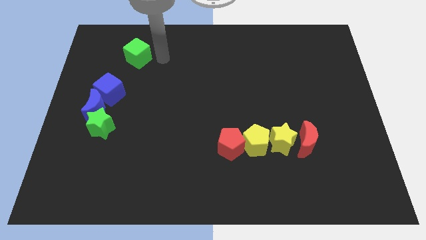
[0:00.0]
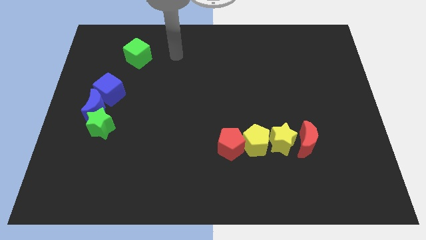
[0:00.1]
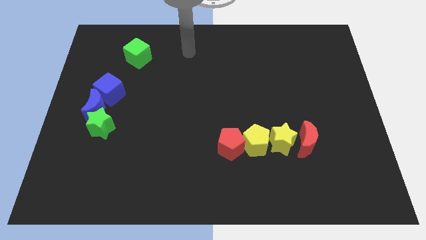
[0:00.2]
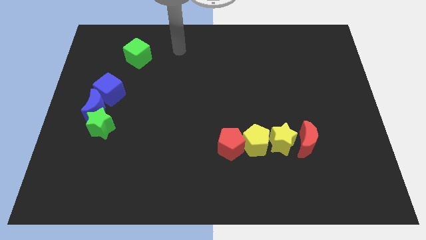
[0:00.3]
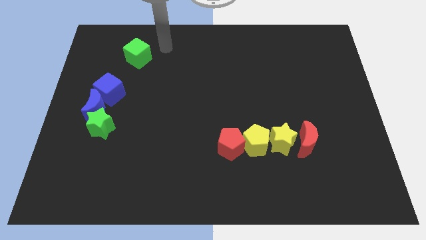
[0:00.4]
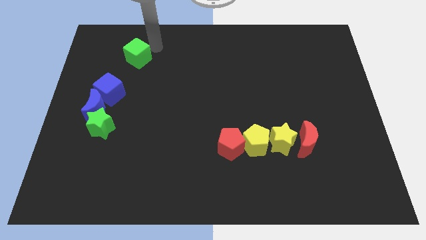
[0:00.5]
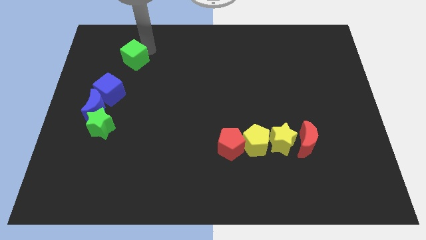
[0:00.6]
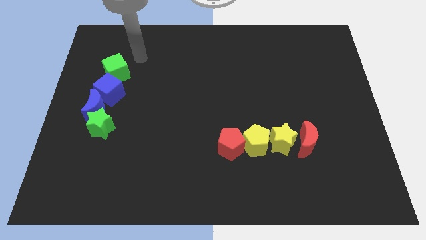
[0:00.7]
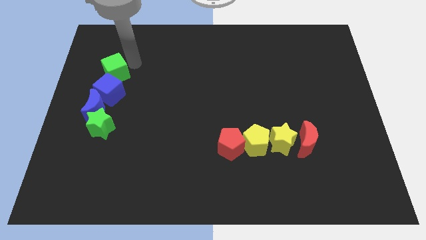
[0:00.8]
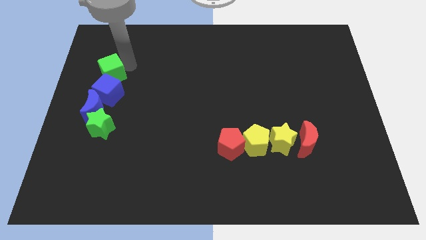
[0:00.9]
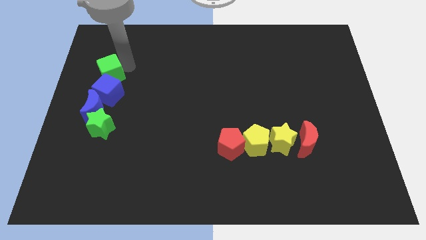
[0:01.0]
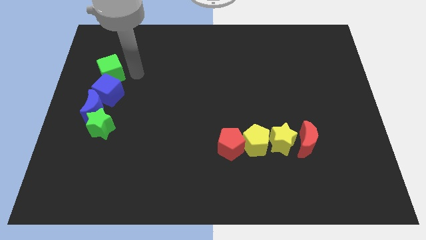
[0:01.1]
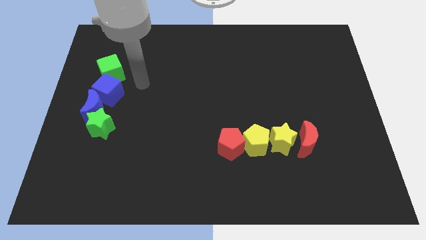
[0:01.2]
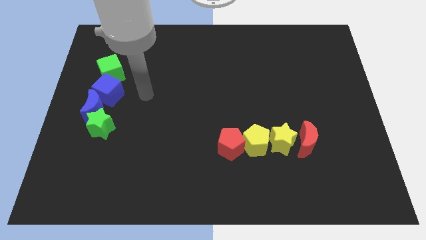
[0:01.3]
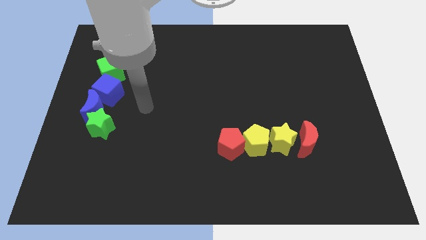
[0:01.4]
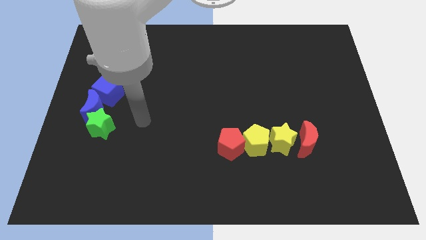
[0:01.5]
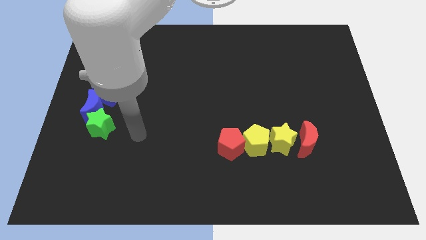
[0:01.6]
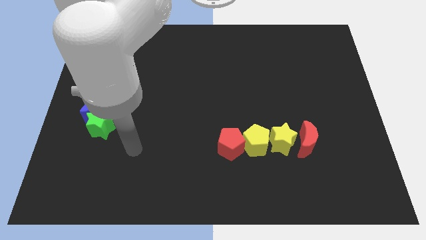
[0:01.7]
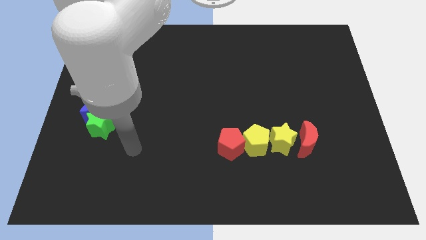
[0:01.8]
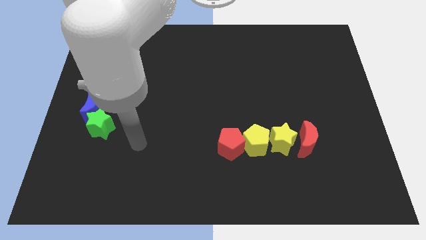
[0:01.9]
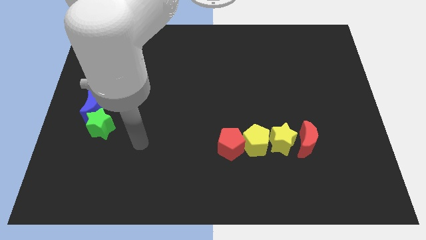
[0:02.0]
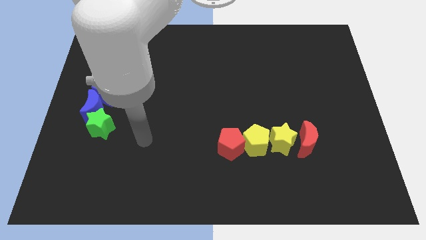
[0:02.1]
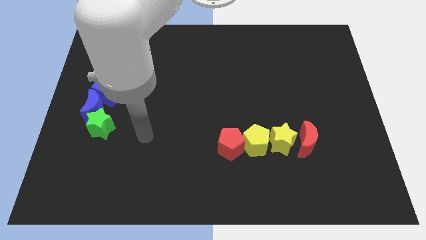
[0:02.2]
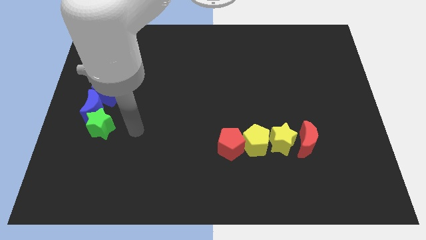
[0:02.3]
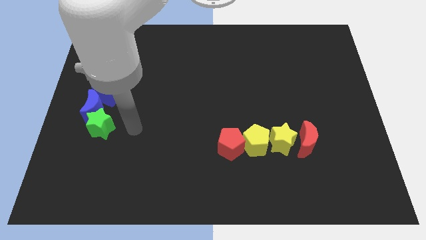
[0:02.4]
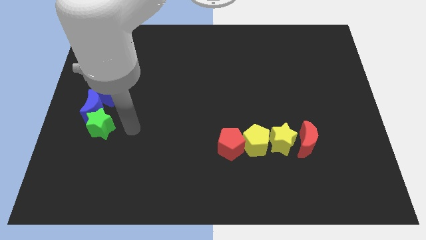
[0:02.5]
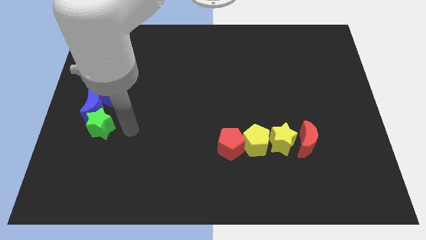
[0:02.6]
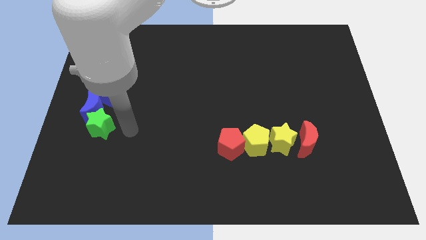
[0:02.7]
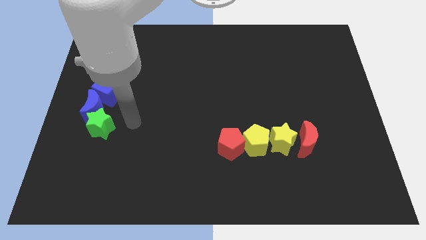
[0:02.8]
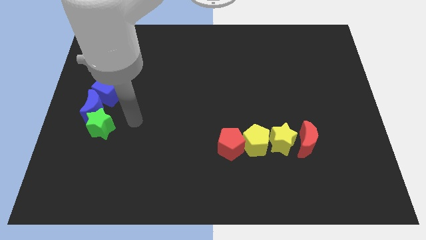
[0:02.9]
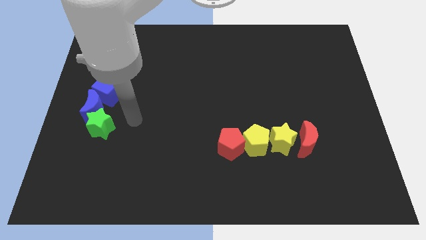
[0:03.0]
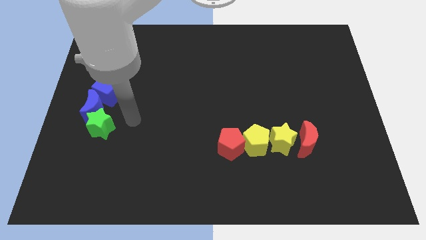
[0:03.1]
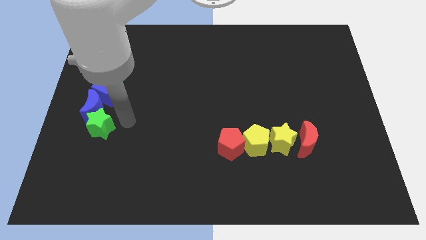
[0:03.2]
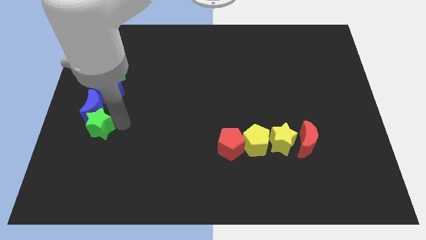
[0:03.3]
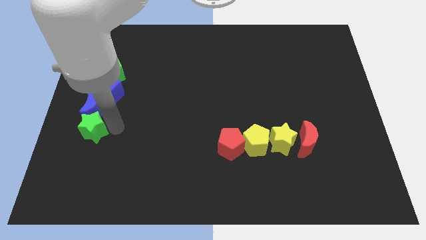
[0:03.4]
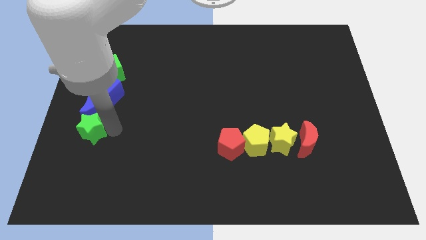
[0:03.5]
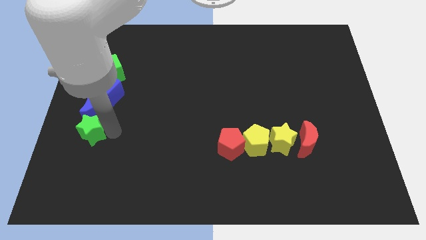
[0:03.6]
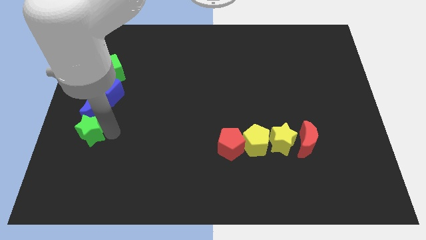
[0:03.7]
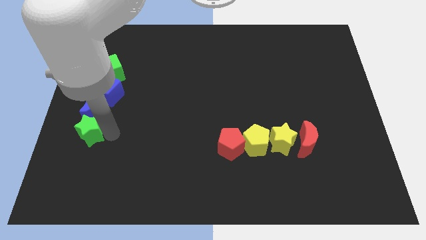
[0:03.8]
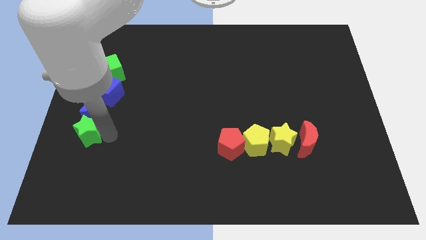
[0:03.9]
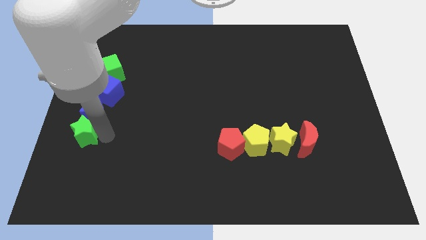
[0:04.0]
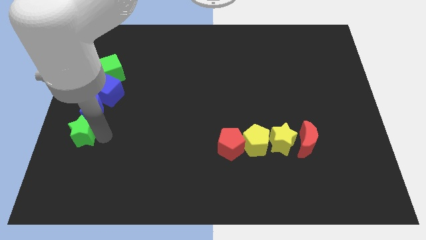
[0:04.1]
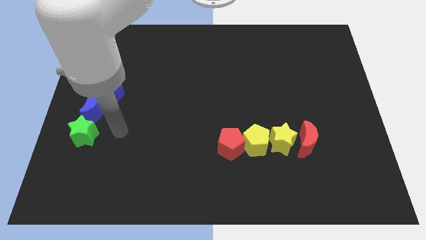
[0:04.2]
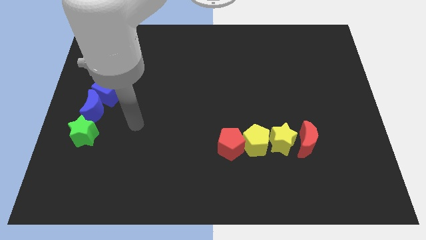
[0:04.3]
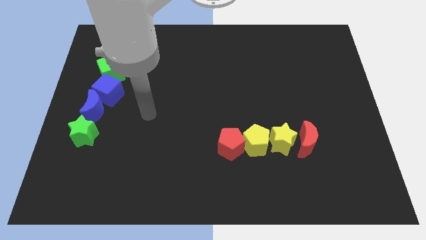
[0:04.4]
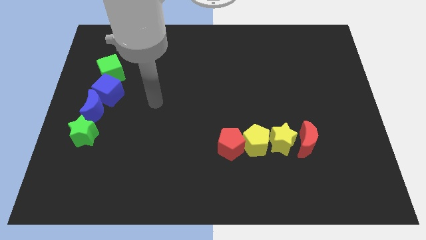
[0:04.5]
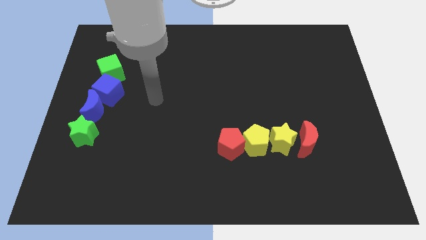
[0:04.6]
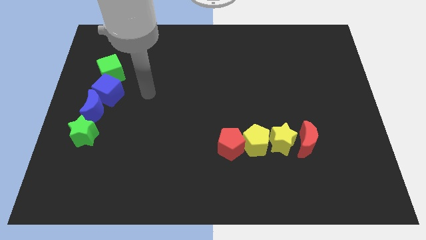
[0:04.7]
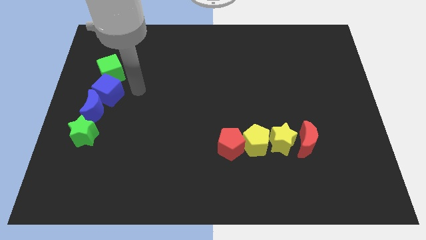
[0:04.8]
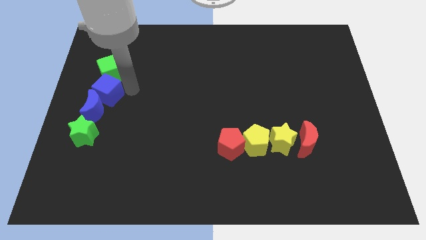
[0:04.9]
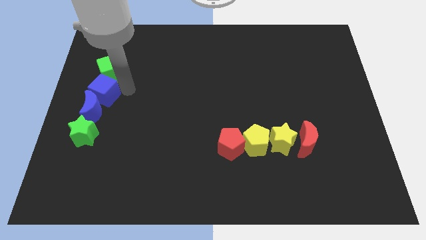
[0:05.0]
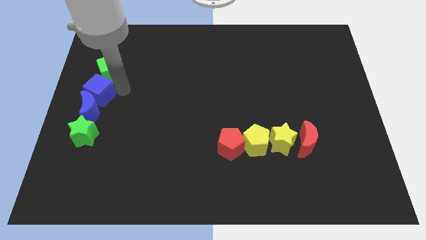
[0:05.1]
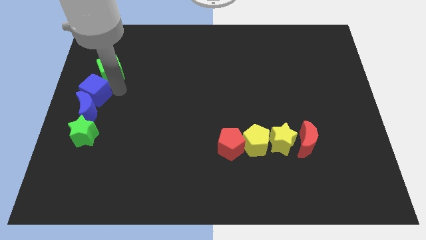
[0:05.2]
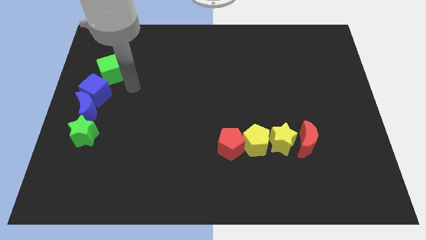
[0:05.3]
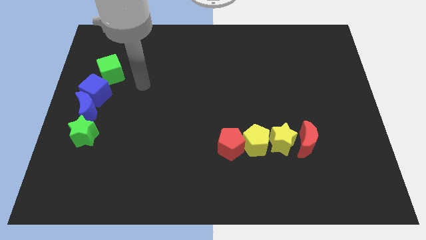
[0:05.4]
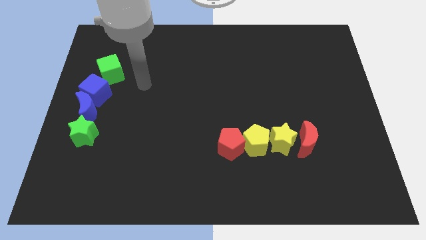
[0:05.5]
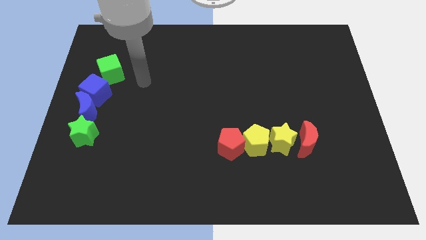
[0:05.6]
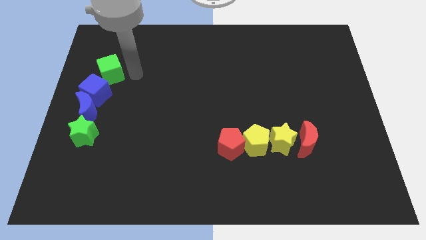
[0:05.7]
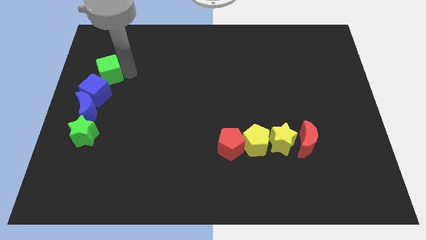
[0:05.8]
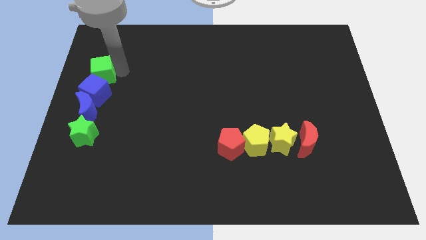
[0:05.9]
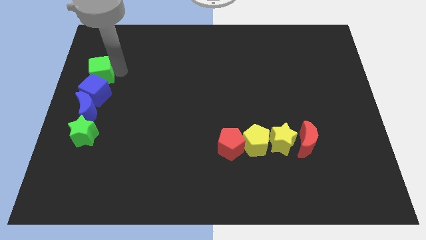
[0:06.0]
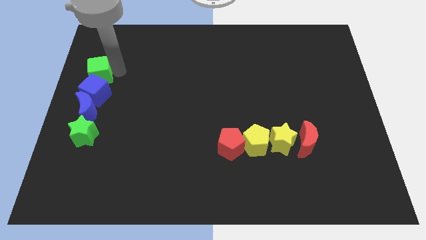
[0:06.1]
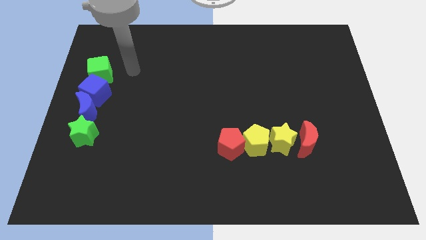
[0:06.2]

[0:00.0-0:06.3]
push green cube in to blue cube

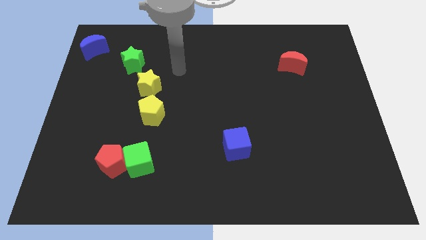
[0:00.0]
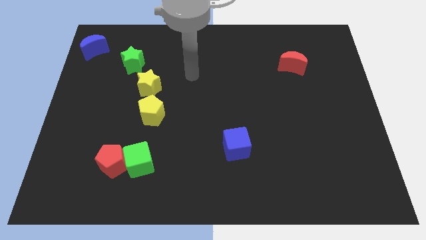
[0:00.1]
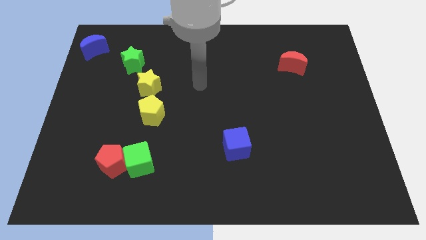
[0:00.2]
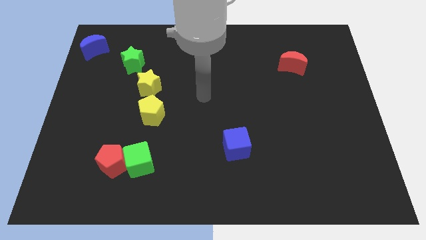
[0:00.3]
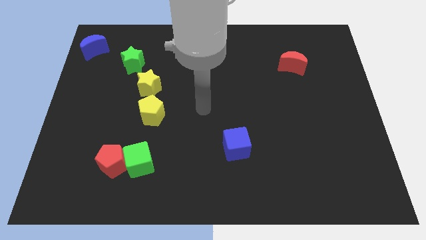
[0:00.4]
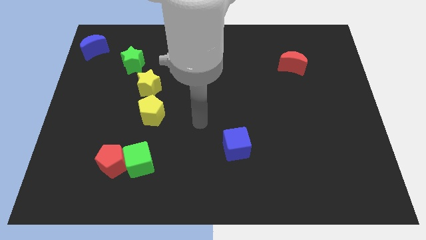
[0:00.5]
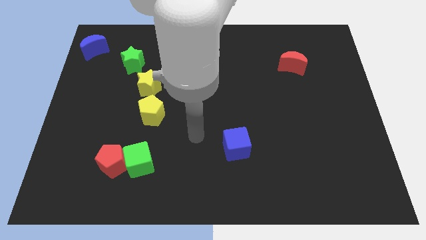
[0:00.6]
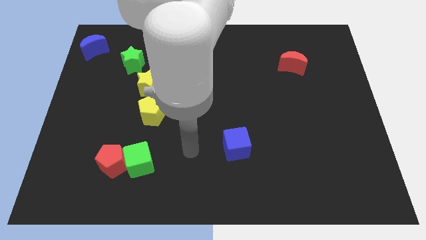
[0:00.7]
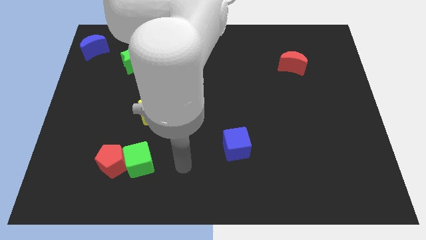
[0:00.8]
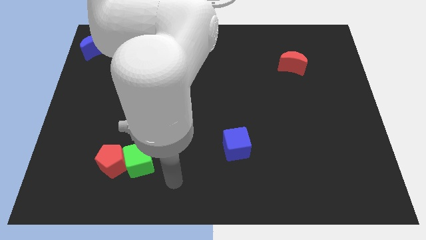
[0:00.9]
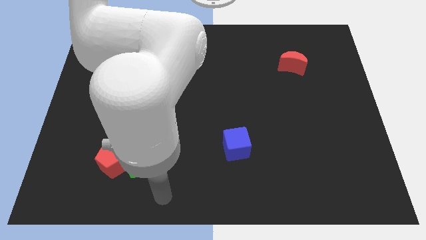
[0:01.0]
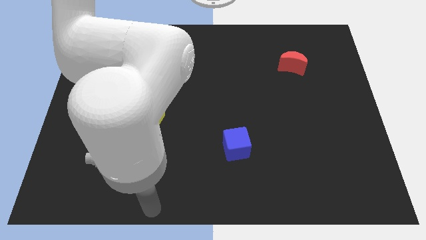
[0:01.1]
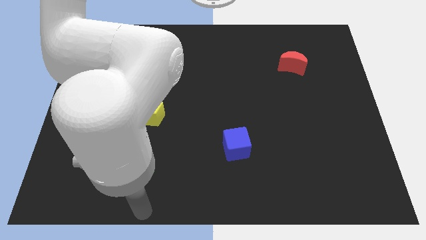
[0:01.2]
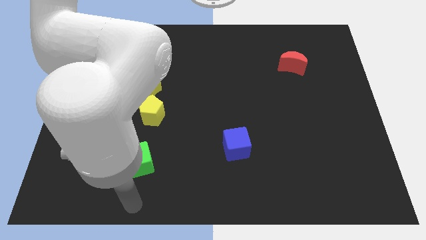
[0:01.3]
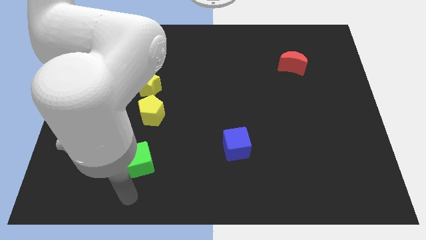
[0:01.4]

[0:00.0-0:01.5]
move your arm towards the bottom side of the green cube

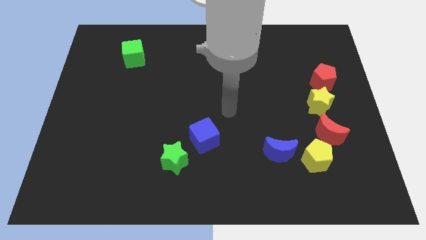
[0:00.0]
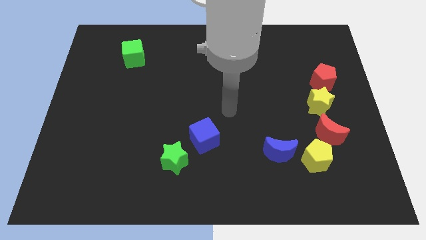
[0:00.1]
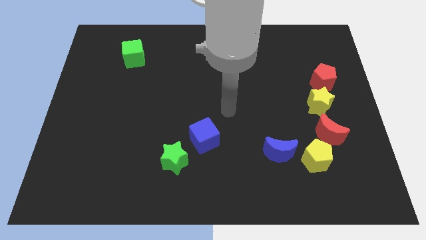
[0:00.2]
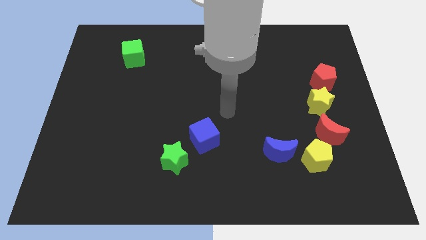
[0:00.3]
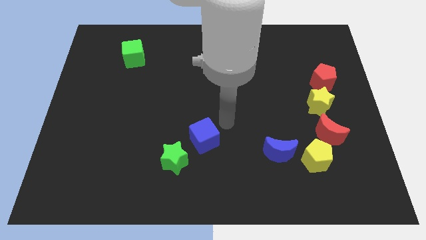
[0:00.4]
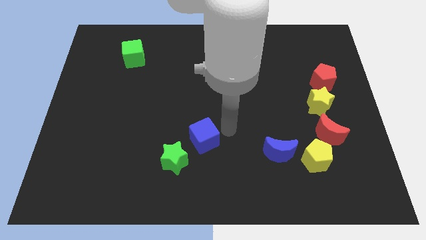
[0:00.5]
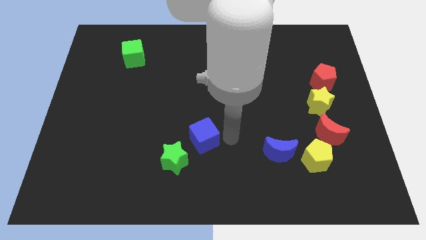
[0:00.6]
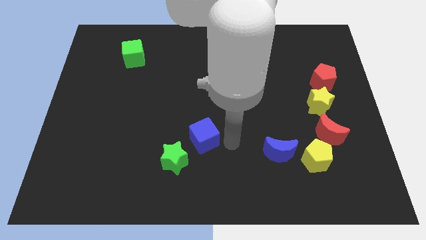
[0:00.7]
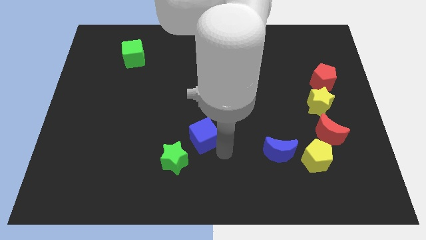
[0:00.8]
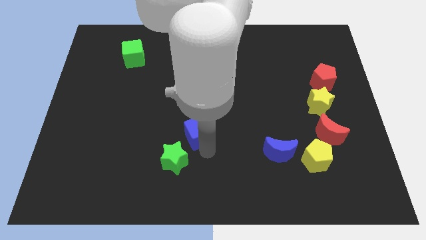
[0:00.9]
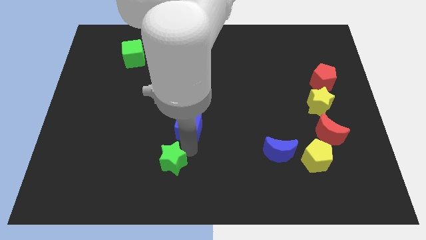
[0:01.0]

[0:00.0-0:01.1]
push the blue cube slightly to left

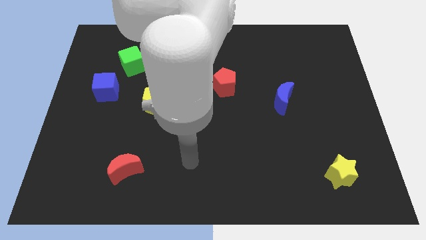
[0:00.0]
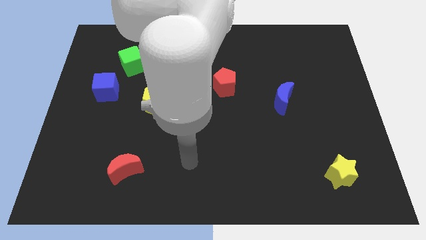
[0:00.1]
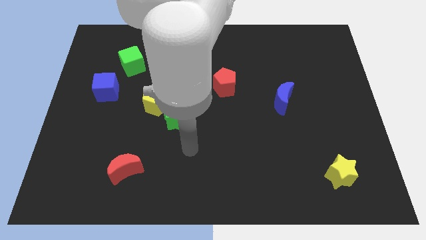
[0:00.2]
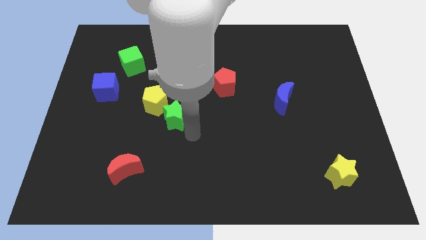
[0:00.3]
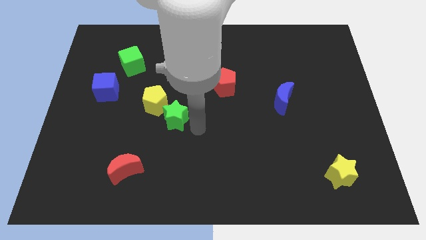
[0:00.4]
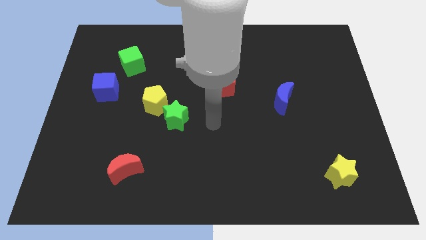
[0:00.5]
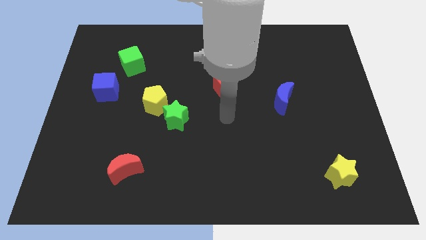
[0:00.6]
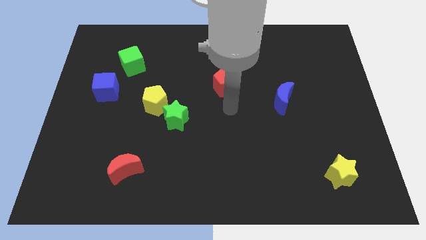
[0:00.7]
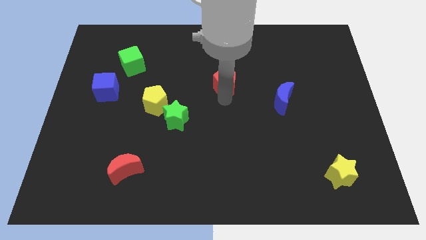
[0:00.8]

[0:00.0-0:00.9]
place the arm below the red pentagon
